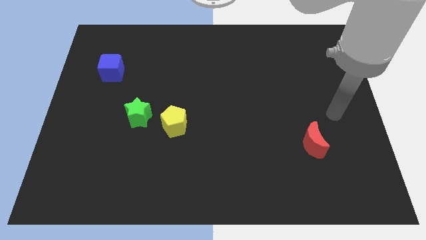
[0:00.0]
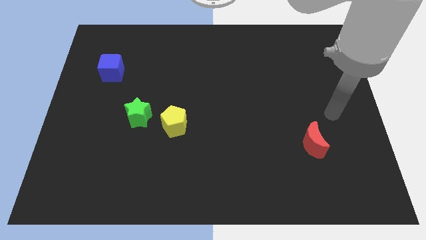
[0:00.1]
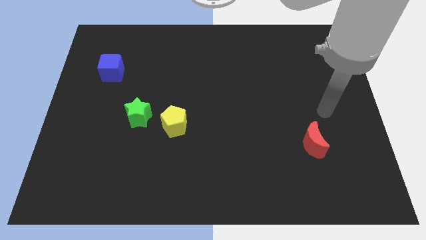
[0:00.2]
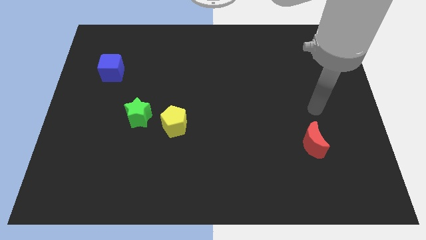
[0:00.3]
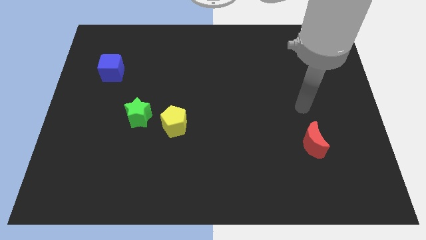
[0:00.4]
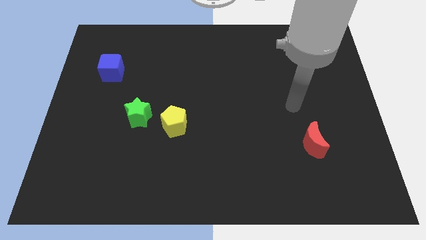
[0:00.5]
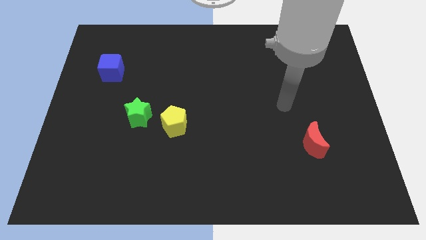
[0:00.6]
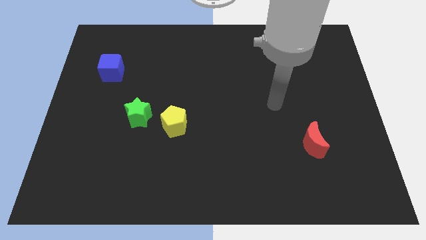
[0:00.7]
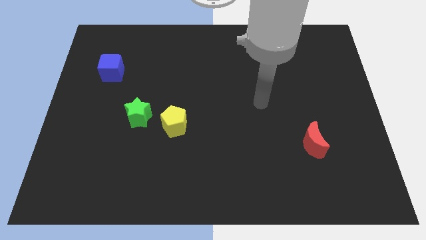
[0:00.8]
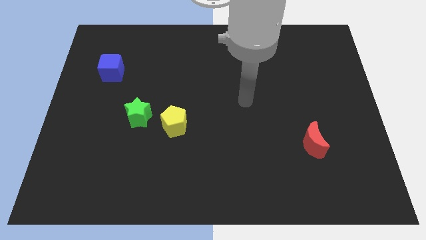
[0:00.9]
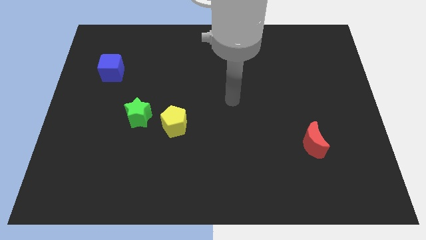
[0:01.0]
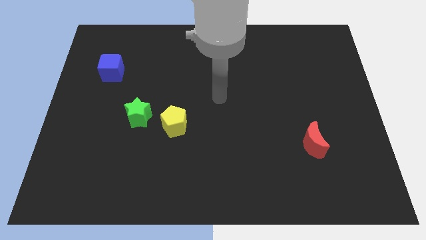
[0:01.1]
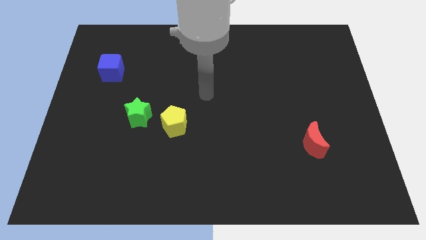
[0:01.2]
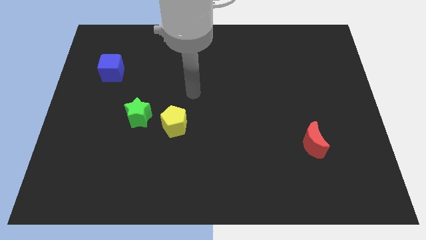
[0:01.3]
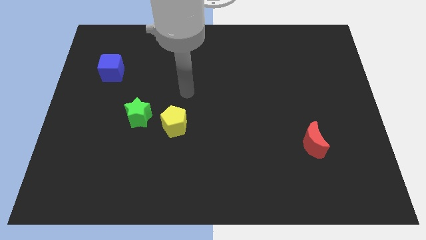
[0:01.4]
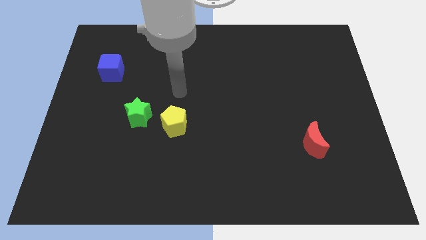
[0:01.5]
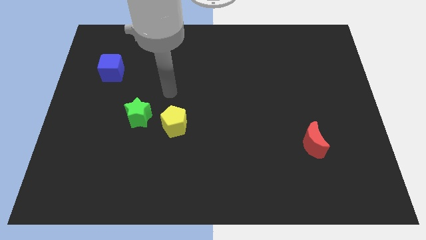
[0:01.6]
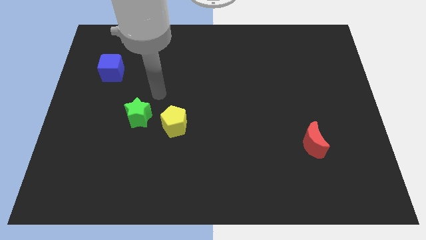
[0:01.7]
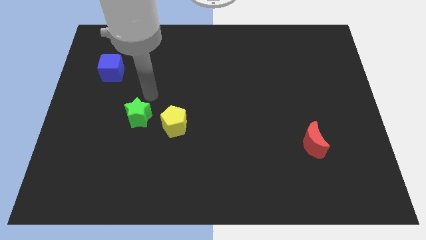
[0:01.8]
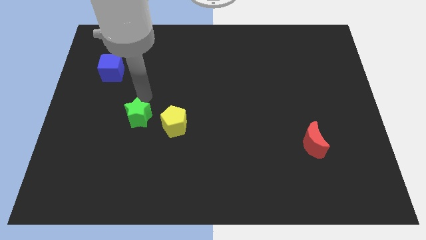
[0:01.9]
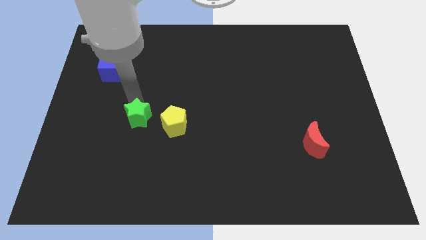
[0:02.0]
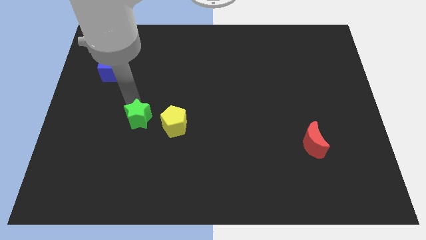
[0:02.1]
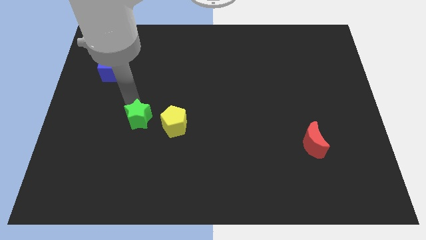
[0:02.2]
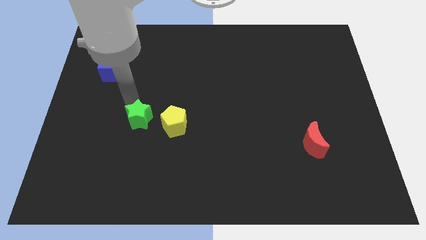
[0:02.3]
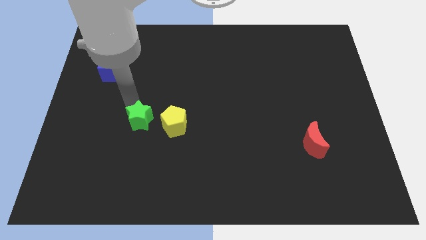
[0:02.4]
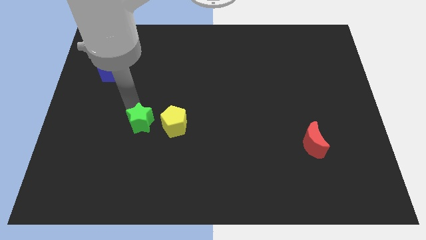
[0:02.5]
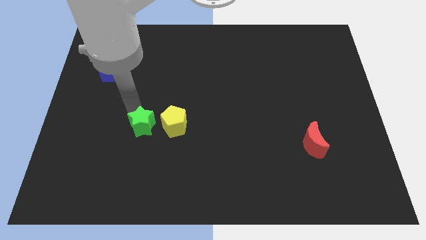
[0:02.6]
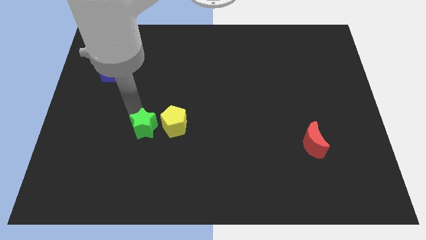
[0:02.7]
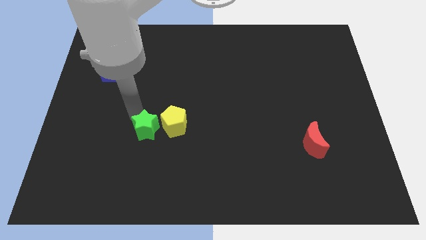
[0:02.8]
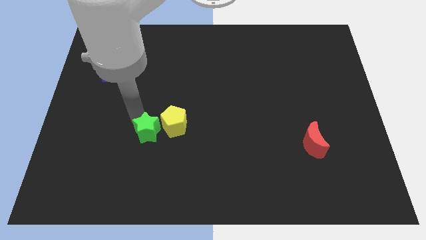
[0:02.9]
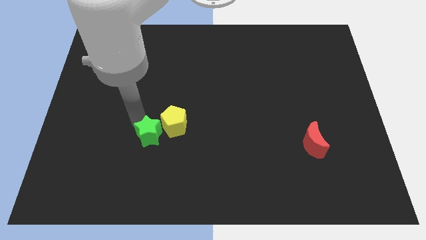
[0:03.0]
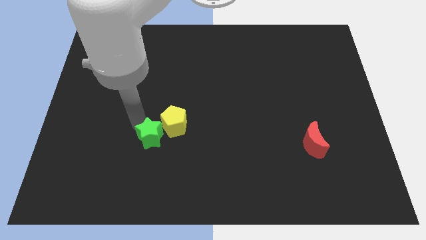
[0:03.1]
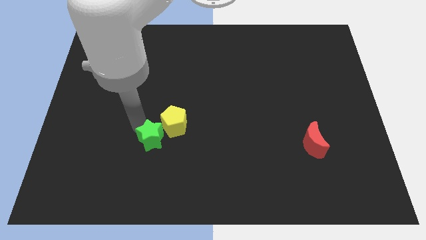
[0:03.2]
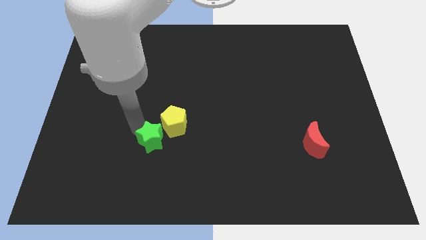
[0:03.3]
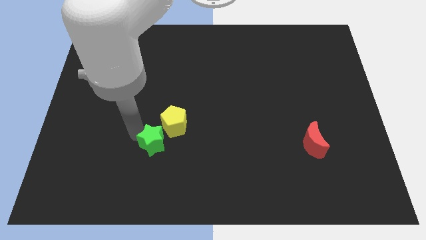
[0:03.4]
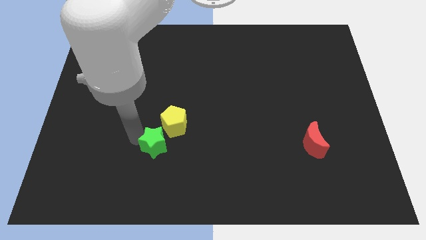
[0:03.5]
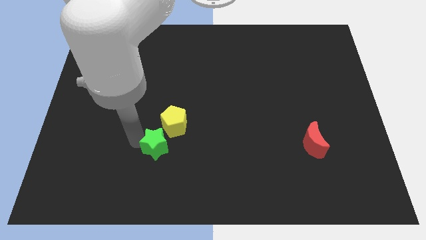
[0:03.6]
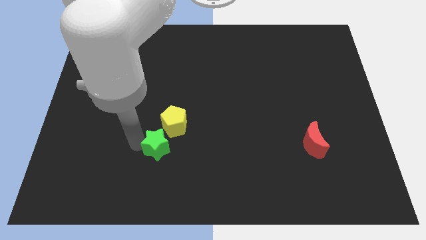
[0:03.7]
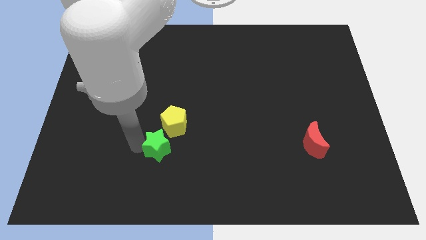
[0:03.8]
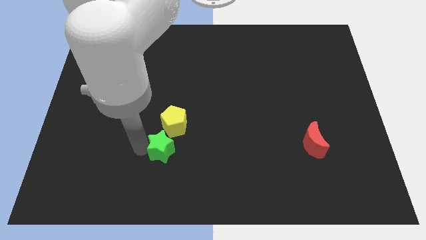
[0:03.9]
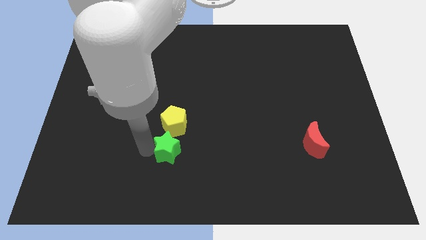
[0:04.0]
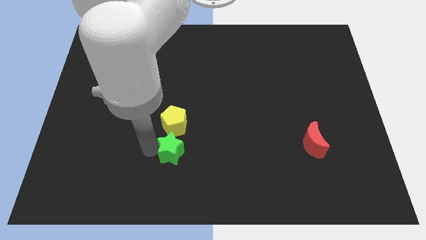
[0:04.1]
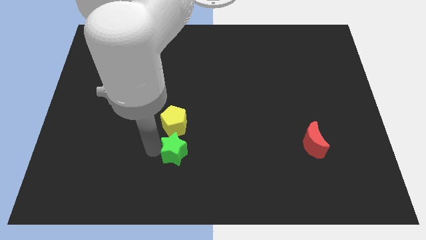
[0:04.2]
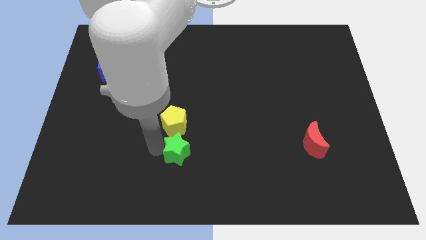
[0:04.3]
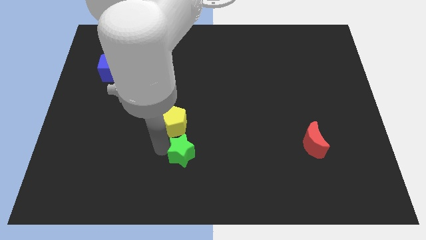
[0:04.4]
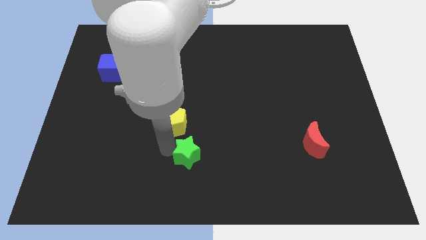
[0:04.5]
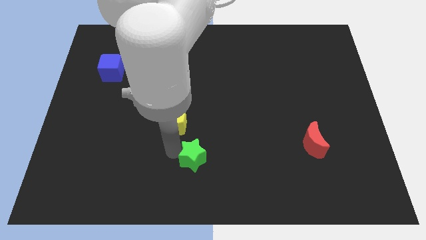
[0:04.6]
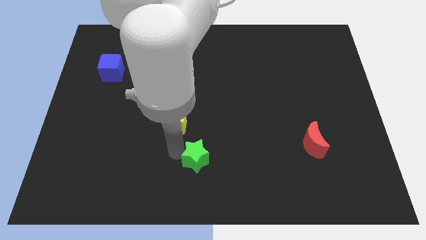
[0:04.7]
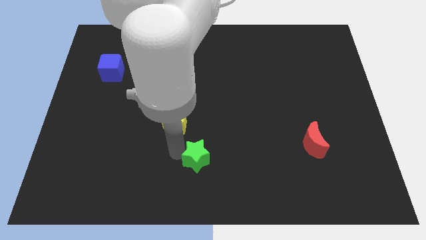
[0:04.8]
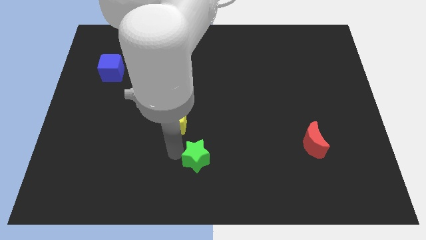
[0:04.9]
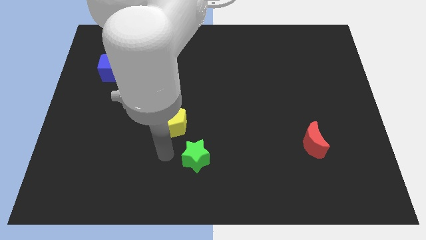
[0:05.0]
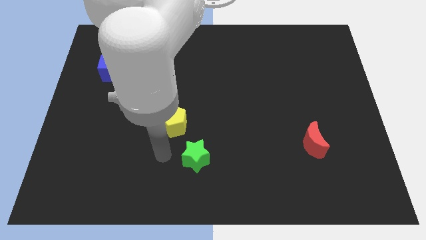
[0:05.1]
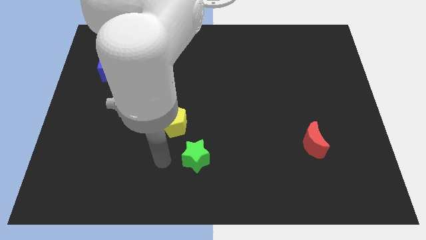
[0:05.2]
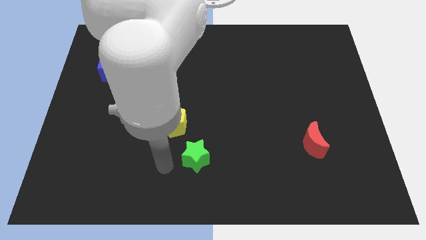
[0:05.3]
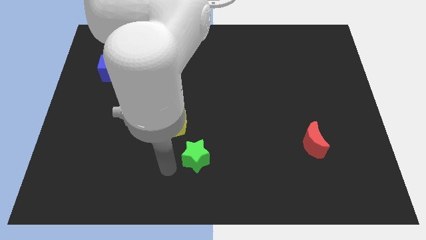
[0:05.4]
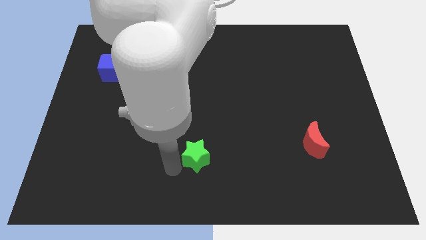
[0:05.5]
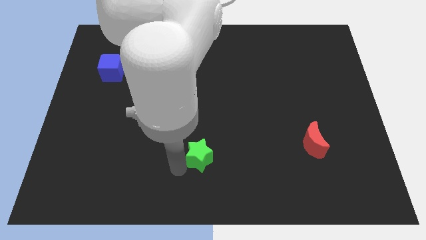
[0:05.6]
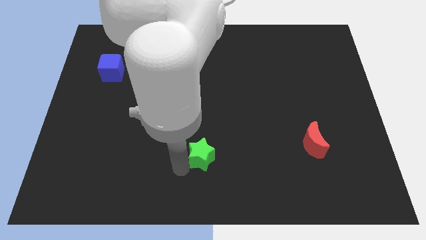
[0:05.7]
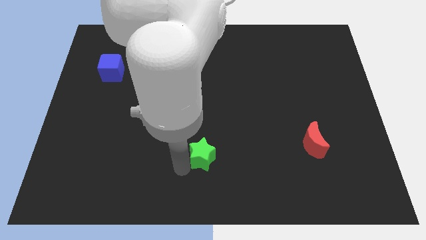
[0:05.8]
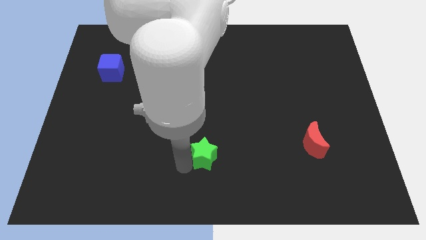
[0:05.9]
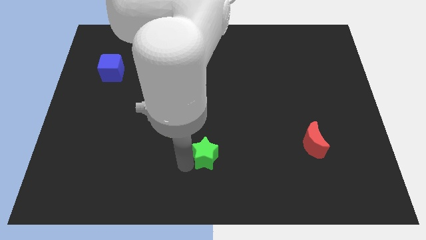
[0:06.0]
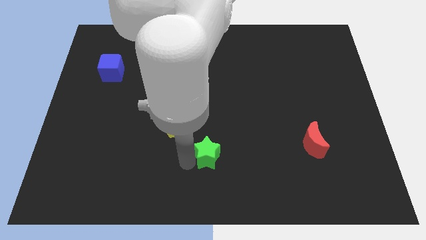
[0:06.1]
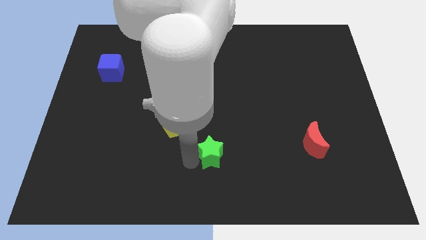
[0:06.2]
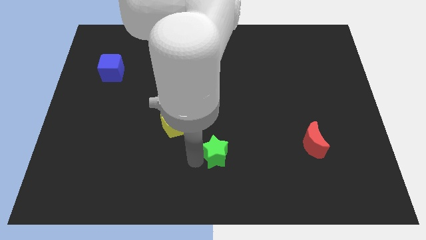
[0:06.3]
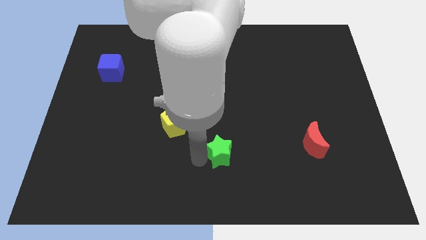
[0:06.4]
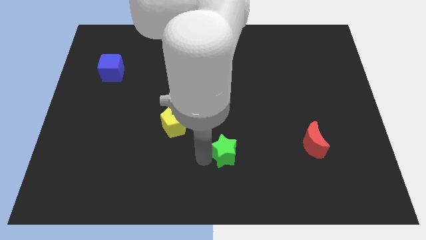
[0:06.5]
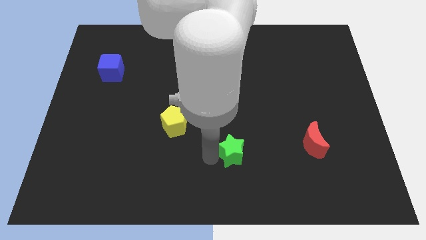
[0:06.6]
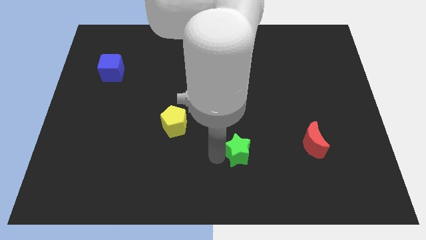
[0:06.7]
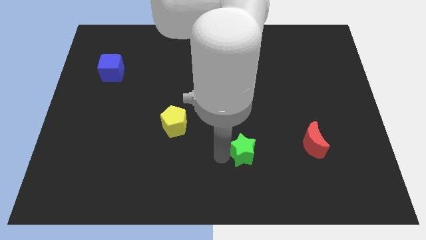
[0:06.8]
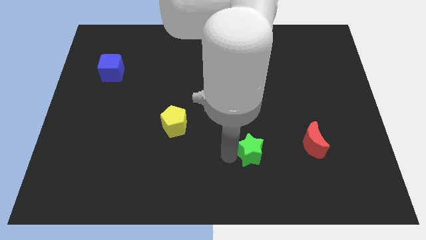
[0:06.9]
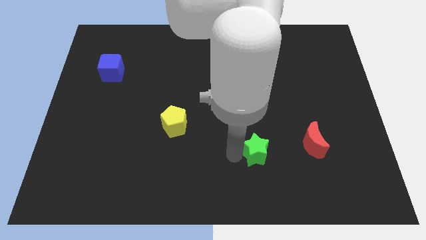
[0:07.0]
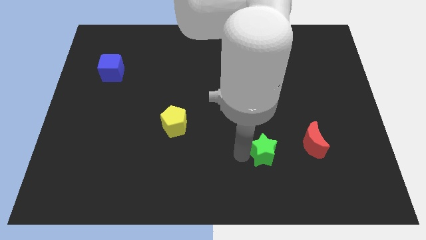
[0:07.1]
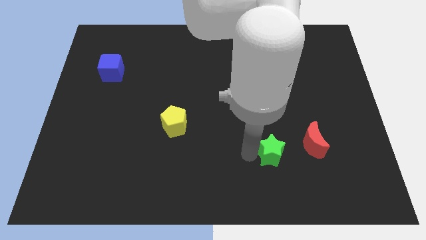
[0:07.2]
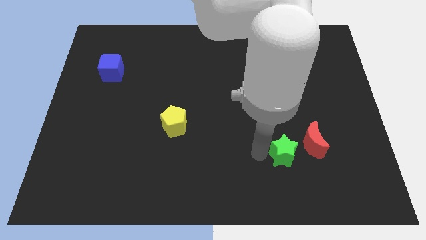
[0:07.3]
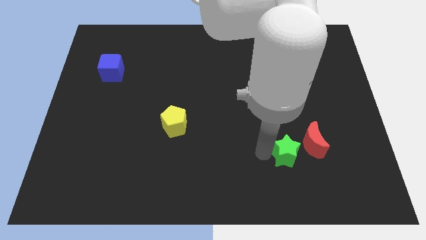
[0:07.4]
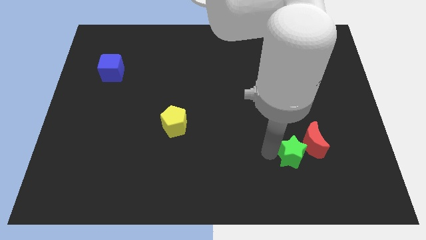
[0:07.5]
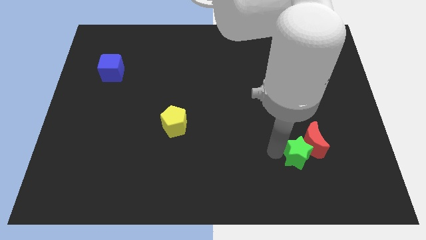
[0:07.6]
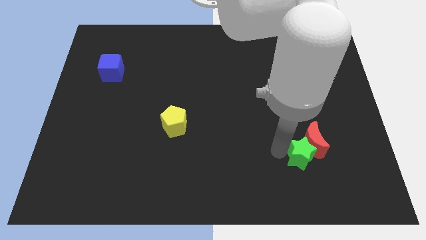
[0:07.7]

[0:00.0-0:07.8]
move the green block next to the red moon

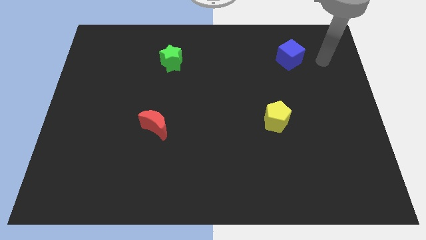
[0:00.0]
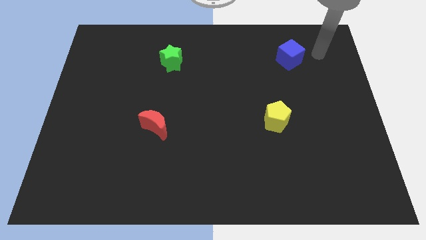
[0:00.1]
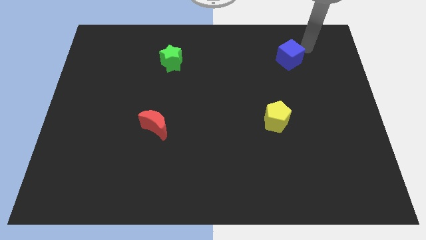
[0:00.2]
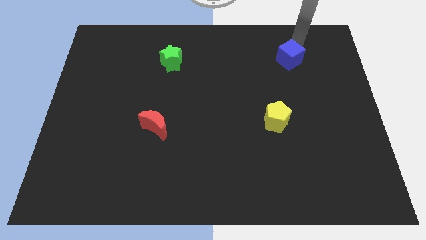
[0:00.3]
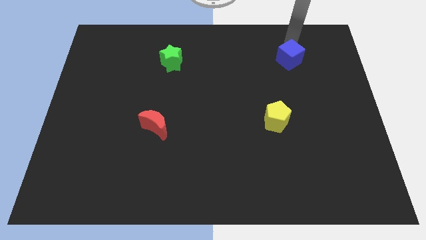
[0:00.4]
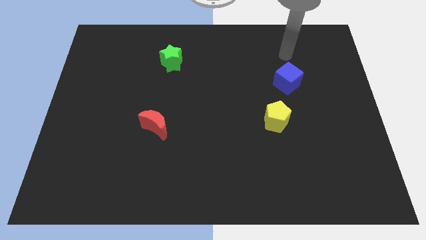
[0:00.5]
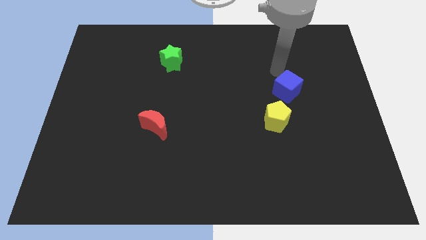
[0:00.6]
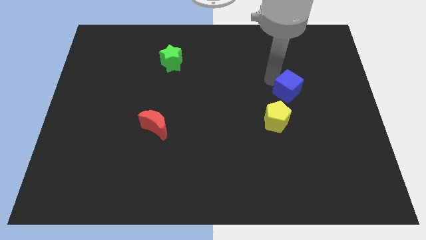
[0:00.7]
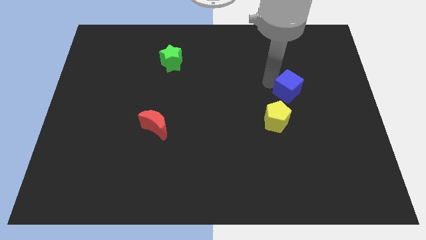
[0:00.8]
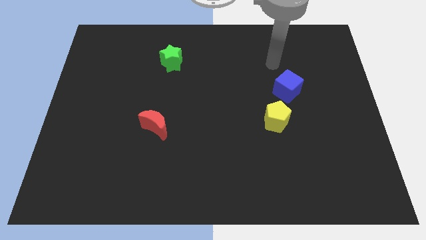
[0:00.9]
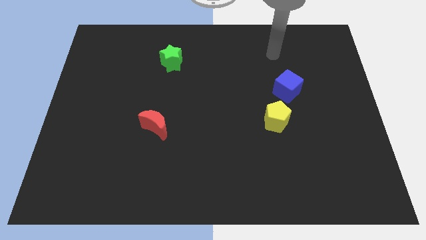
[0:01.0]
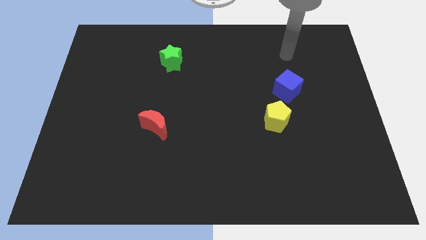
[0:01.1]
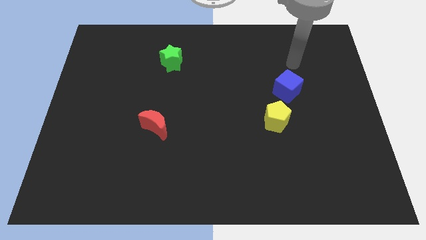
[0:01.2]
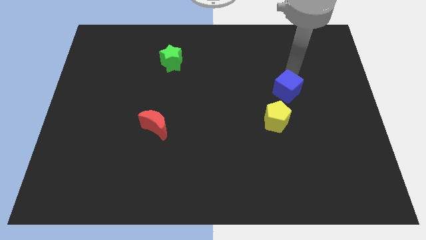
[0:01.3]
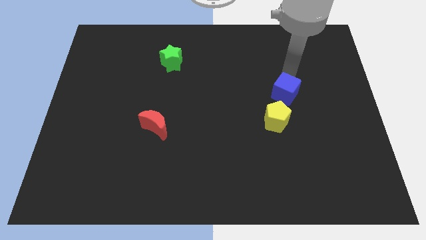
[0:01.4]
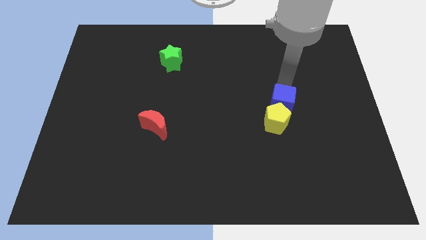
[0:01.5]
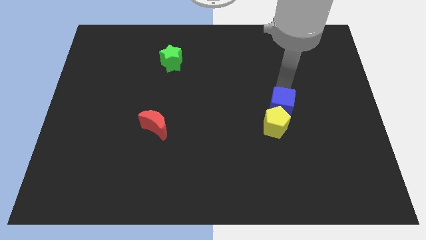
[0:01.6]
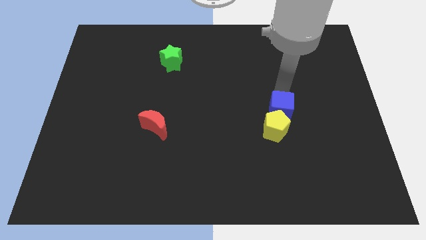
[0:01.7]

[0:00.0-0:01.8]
push the blue cube next to the yellow pentagon
